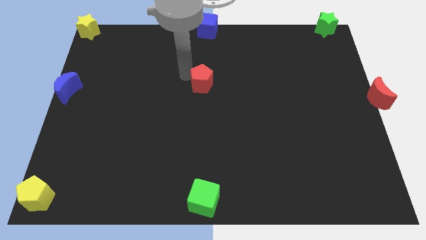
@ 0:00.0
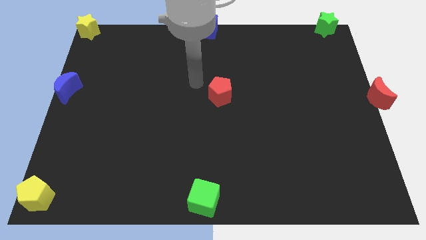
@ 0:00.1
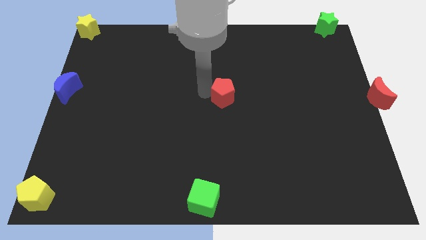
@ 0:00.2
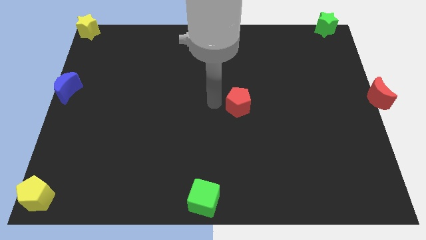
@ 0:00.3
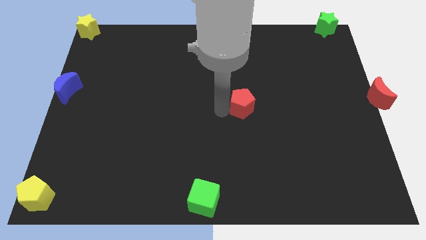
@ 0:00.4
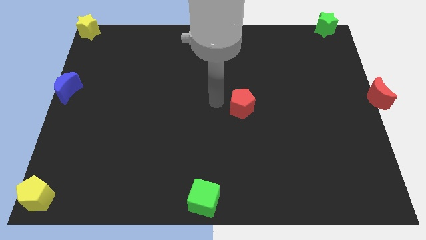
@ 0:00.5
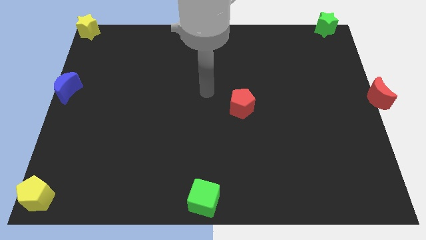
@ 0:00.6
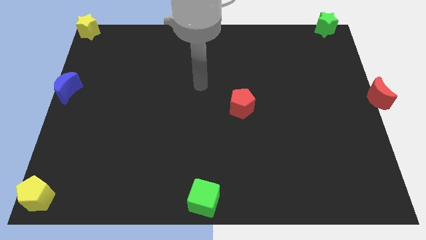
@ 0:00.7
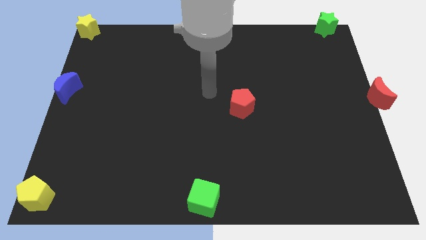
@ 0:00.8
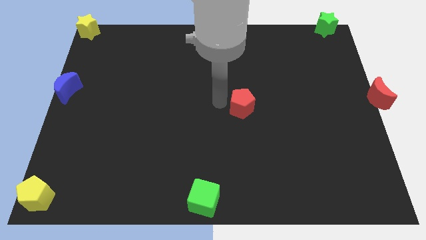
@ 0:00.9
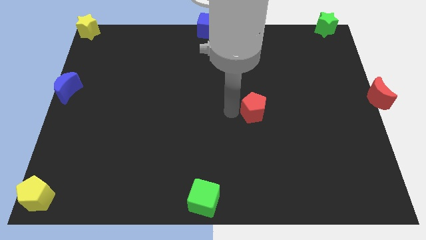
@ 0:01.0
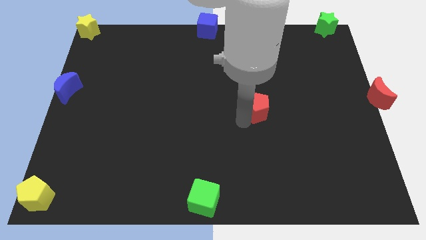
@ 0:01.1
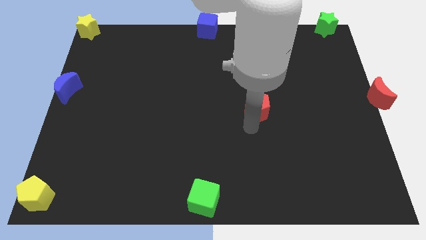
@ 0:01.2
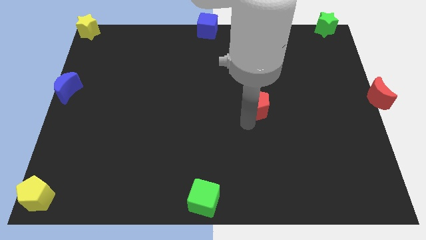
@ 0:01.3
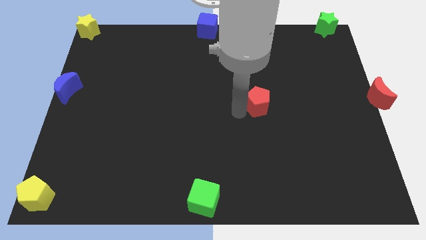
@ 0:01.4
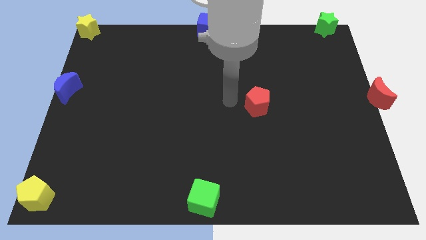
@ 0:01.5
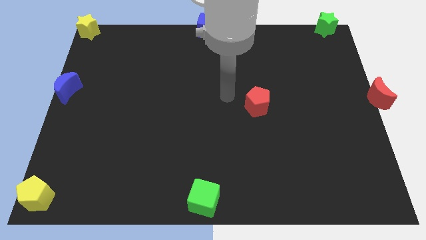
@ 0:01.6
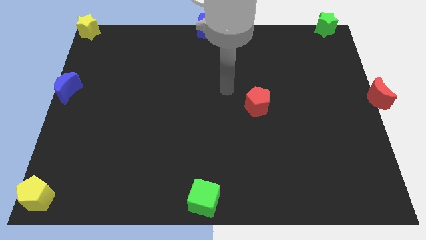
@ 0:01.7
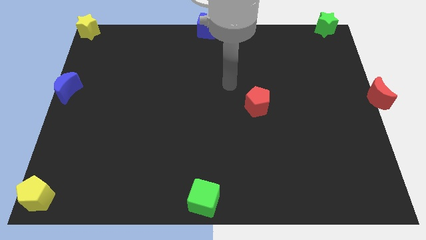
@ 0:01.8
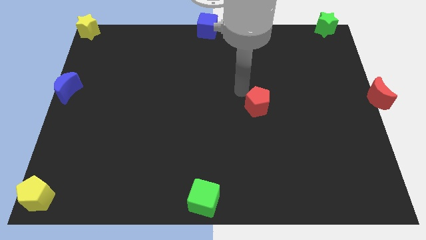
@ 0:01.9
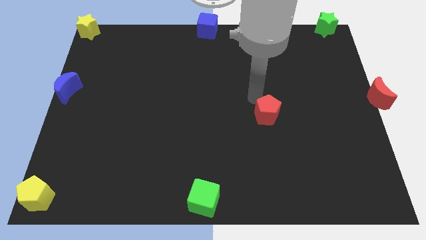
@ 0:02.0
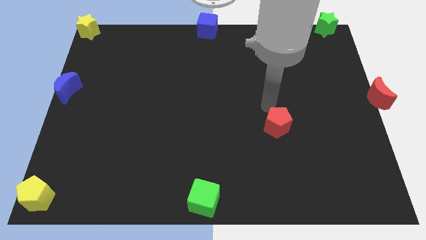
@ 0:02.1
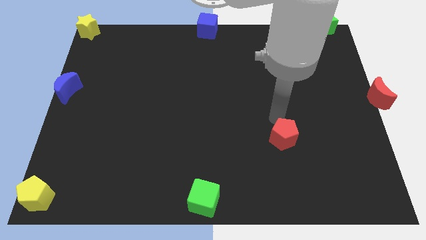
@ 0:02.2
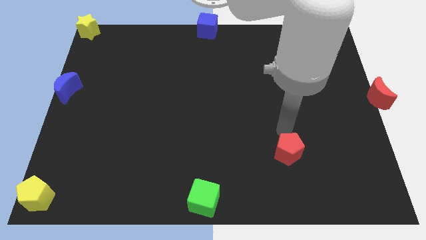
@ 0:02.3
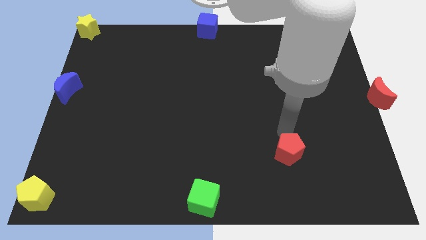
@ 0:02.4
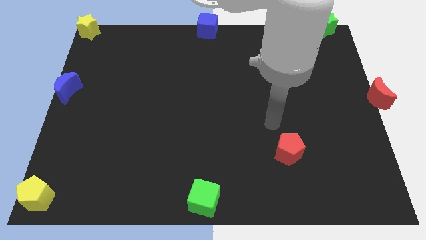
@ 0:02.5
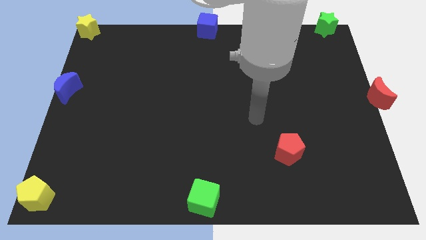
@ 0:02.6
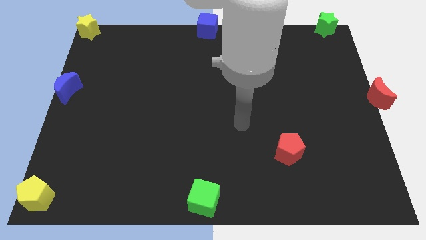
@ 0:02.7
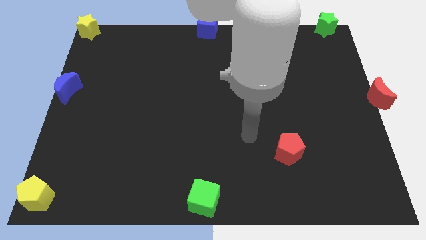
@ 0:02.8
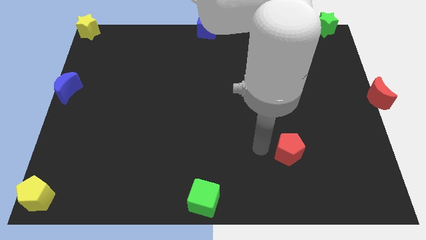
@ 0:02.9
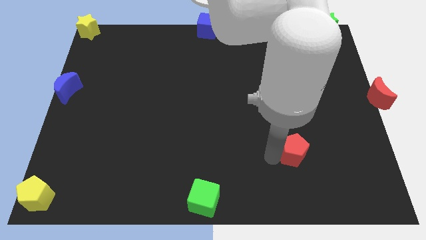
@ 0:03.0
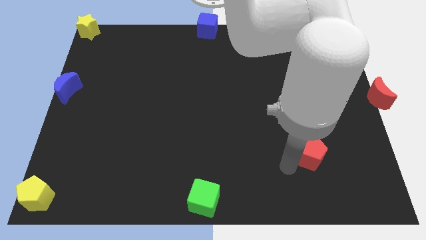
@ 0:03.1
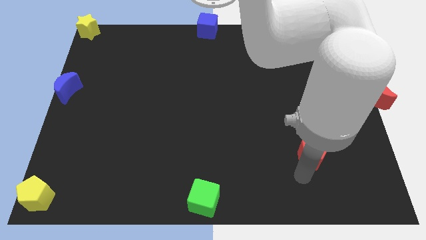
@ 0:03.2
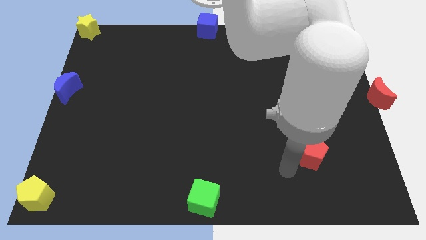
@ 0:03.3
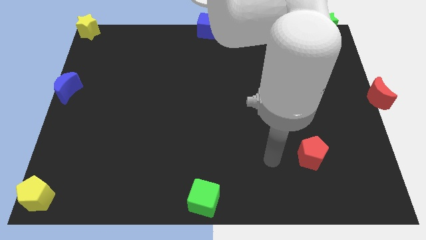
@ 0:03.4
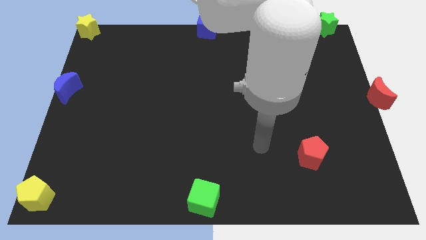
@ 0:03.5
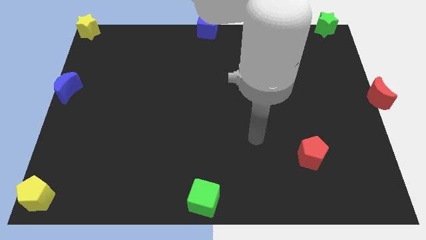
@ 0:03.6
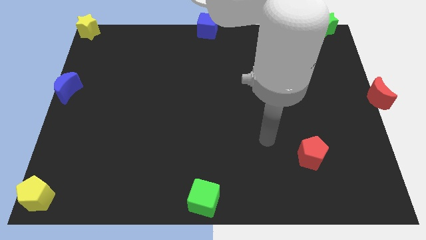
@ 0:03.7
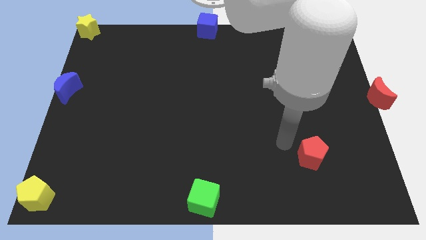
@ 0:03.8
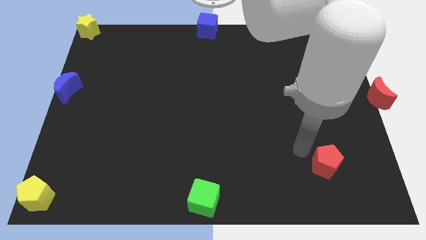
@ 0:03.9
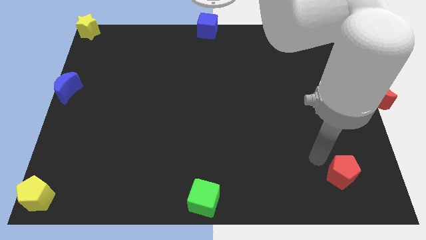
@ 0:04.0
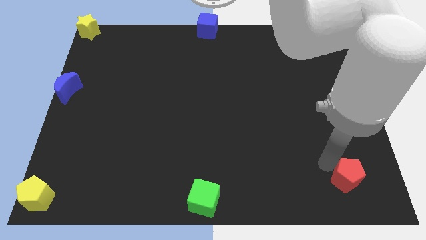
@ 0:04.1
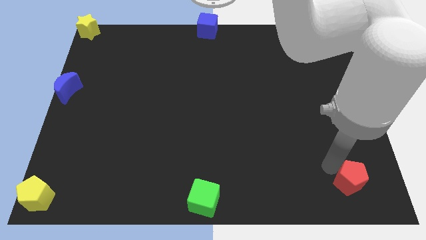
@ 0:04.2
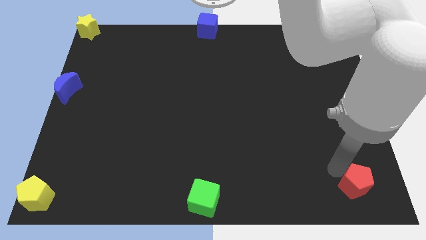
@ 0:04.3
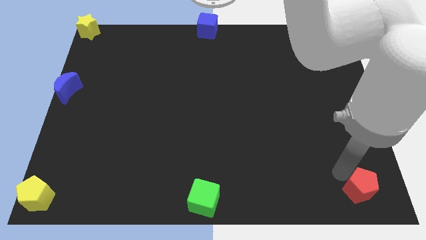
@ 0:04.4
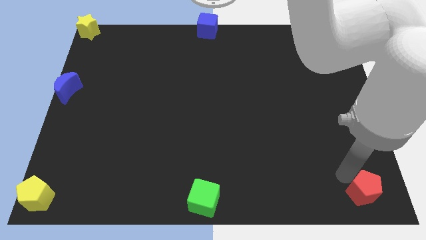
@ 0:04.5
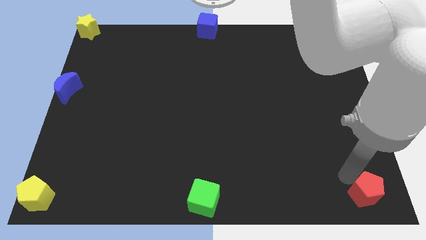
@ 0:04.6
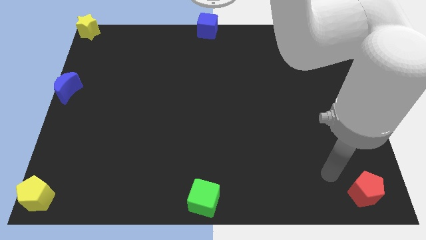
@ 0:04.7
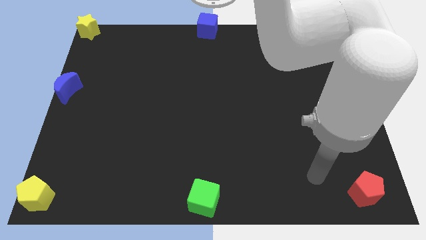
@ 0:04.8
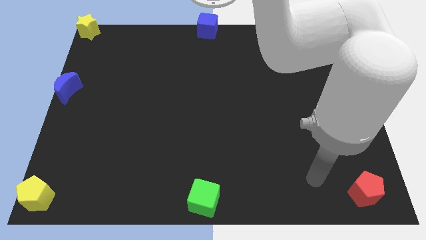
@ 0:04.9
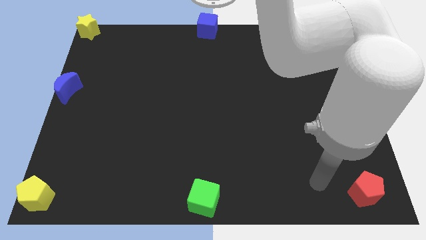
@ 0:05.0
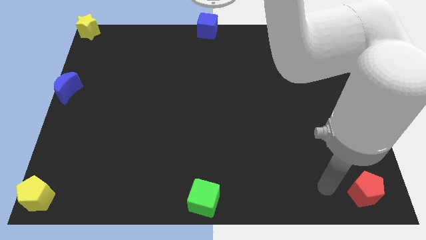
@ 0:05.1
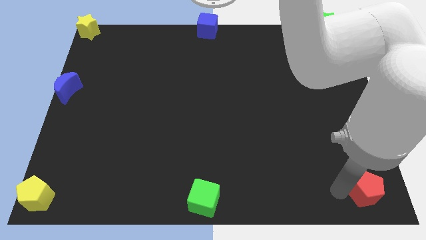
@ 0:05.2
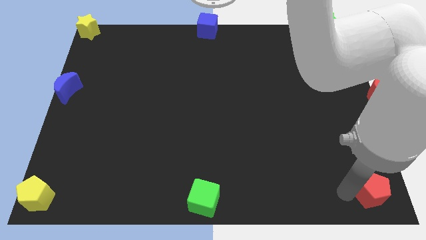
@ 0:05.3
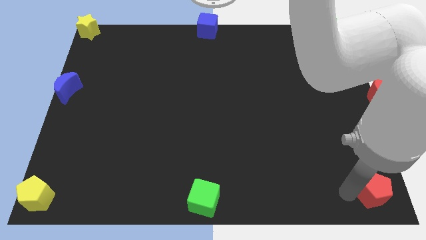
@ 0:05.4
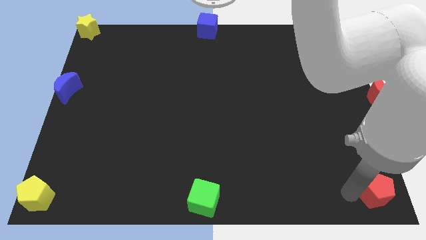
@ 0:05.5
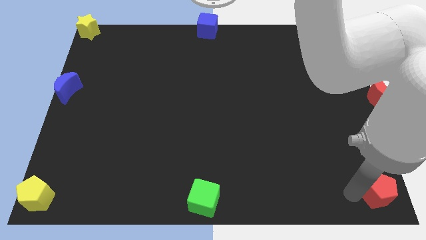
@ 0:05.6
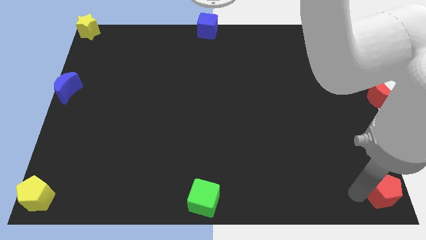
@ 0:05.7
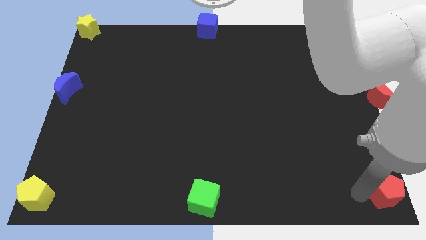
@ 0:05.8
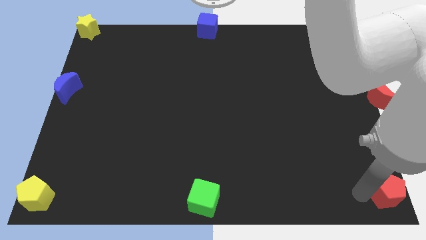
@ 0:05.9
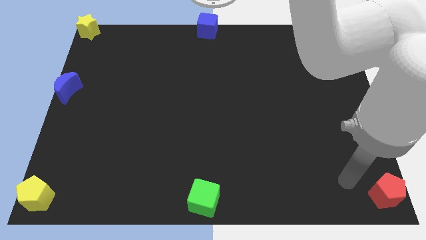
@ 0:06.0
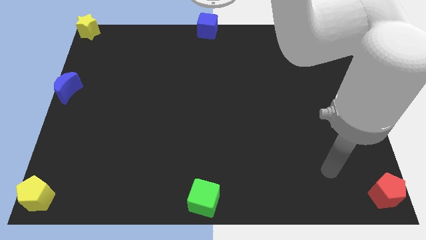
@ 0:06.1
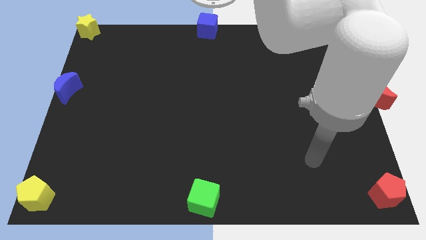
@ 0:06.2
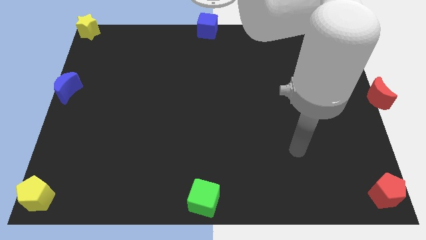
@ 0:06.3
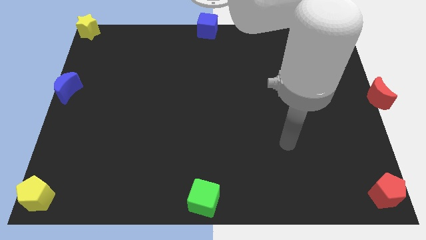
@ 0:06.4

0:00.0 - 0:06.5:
push red pentagon towards bottom right corner of the board

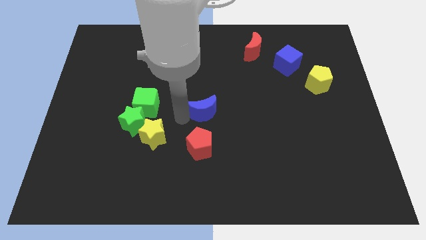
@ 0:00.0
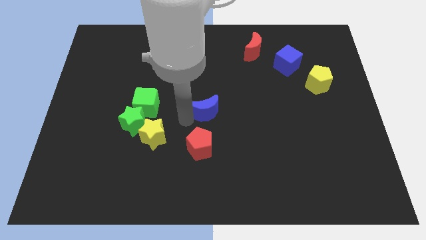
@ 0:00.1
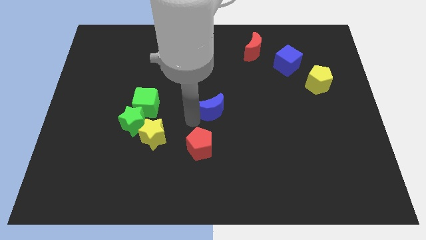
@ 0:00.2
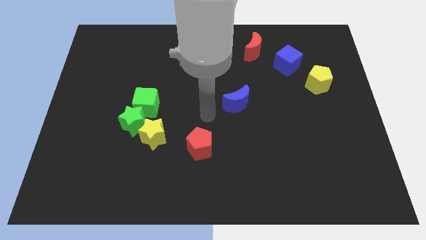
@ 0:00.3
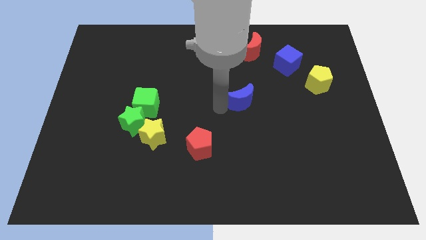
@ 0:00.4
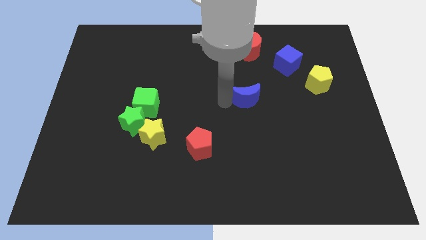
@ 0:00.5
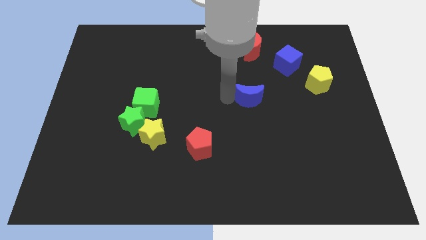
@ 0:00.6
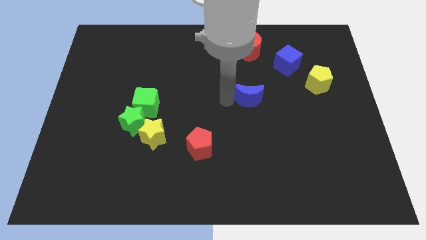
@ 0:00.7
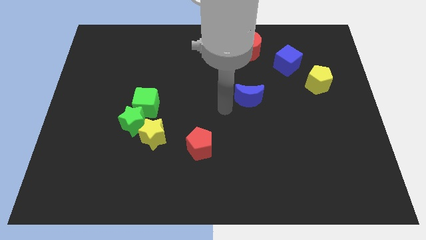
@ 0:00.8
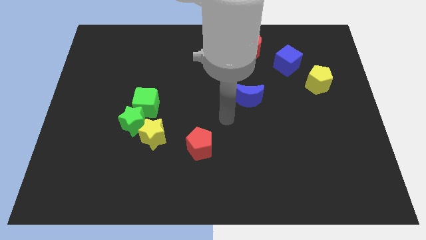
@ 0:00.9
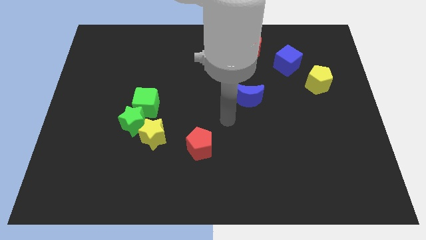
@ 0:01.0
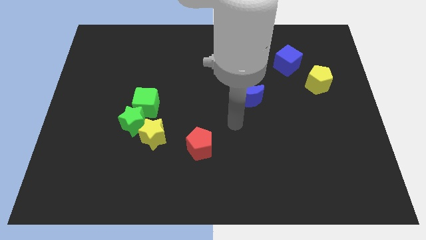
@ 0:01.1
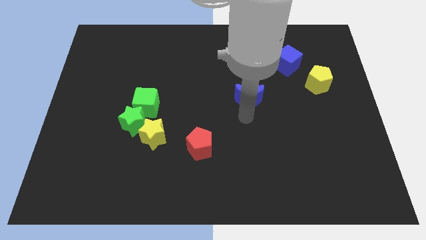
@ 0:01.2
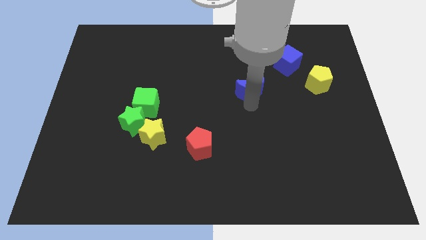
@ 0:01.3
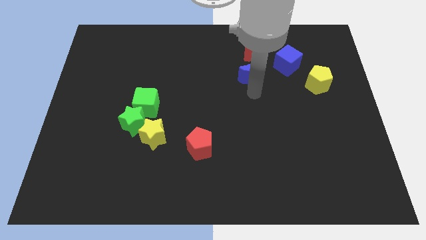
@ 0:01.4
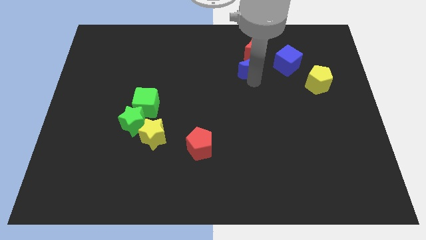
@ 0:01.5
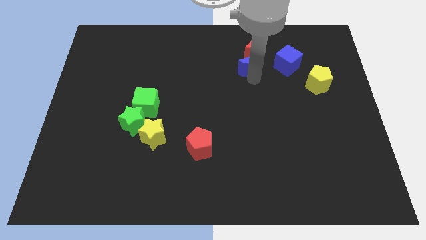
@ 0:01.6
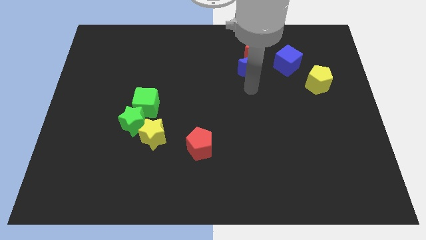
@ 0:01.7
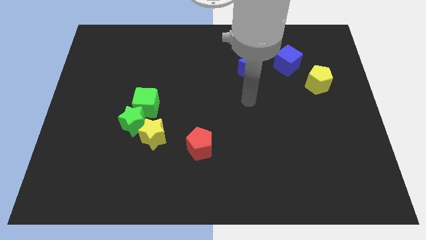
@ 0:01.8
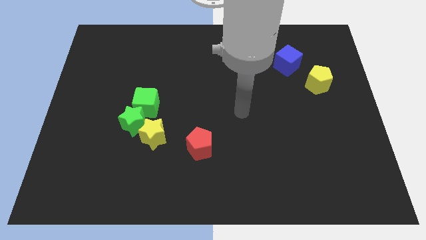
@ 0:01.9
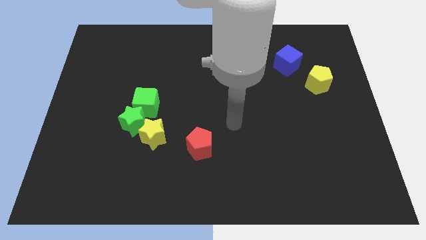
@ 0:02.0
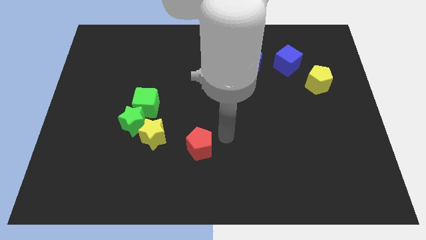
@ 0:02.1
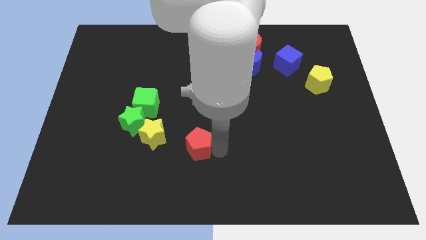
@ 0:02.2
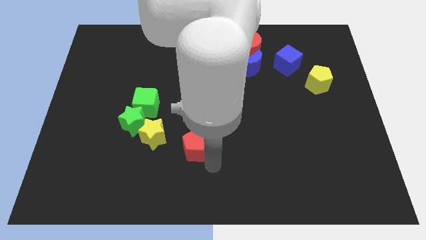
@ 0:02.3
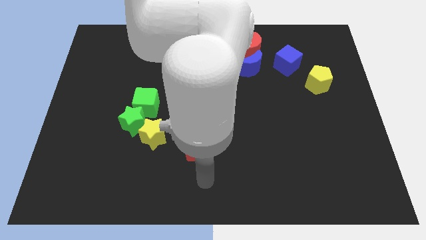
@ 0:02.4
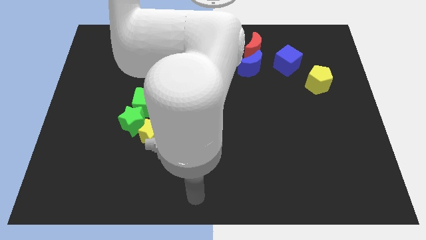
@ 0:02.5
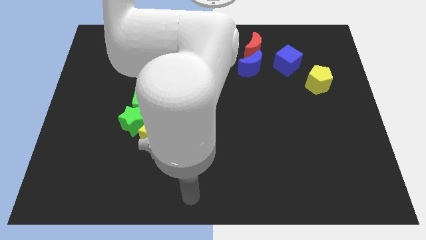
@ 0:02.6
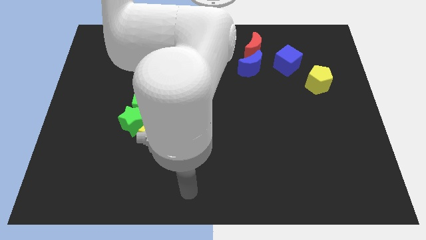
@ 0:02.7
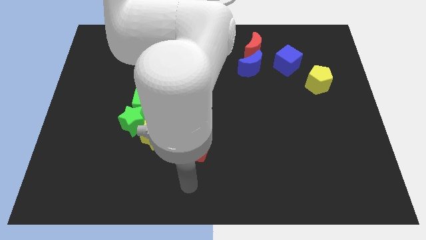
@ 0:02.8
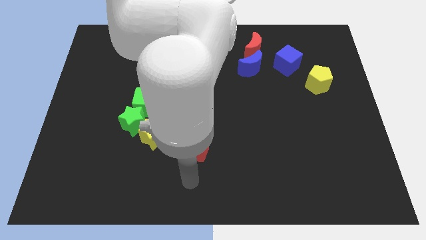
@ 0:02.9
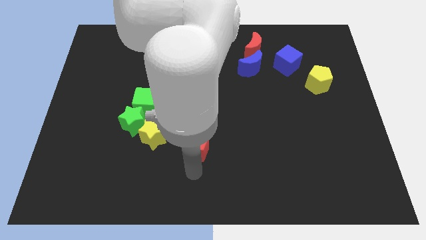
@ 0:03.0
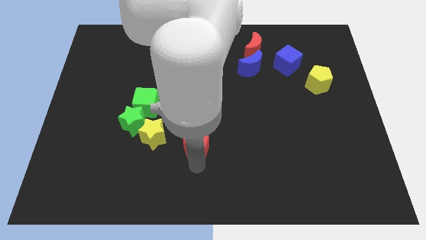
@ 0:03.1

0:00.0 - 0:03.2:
move the blue moon into the red moon
